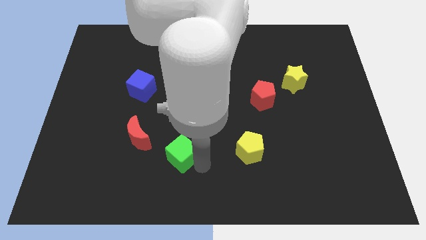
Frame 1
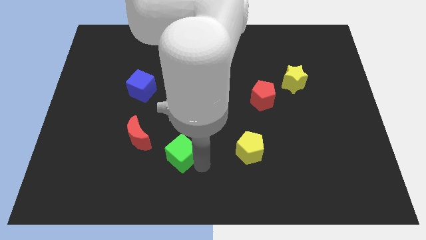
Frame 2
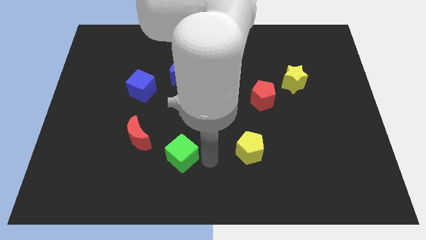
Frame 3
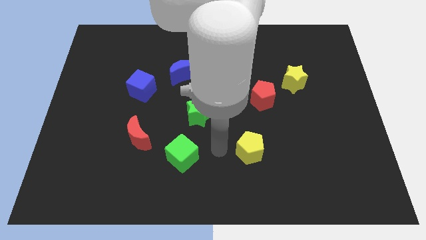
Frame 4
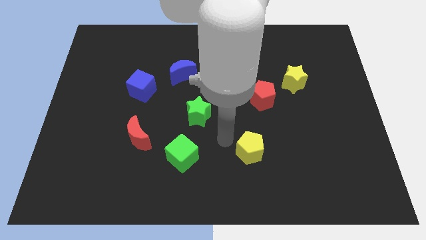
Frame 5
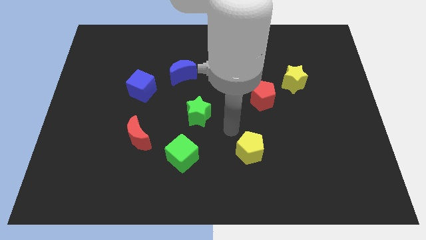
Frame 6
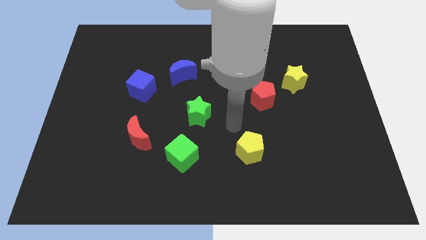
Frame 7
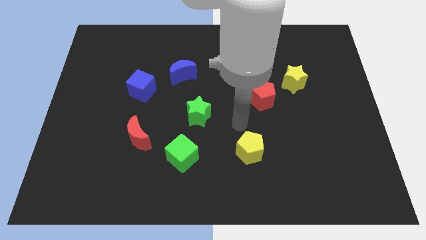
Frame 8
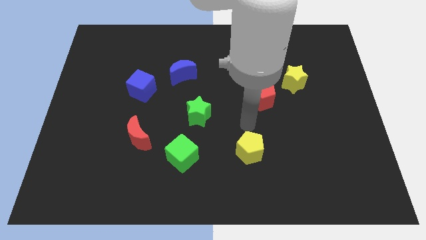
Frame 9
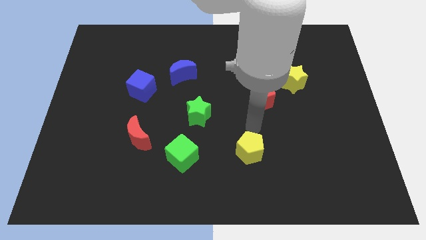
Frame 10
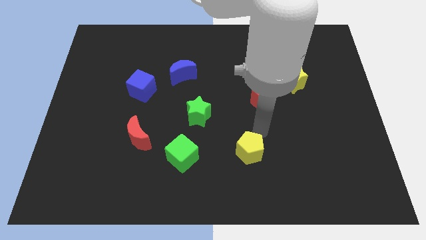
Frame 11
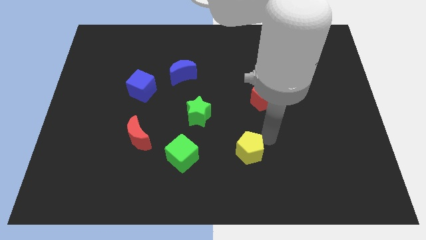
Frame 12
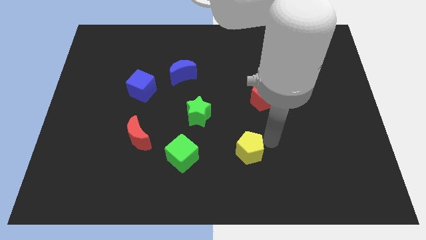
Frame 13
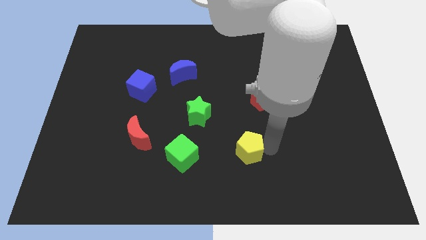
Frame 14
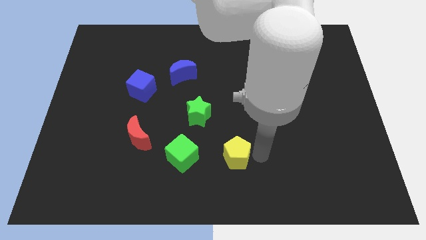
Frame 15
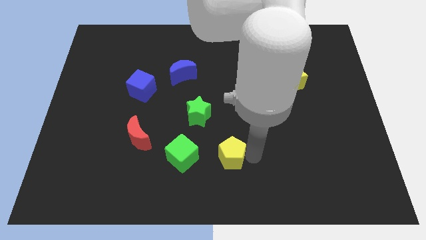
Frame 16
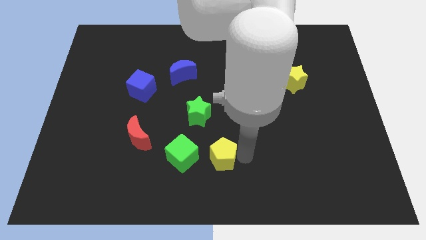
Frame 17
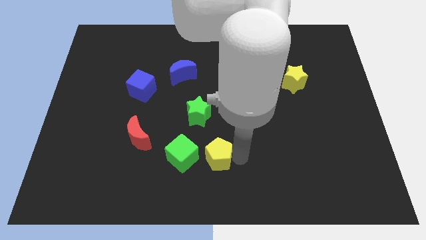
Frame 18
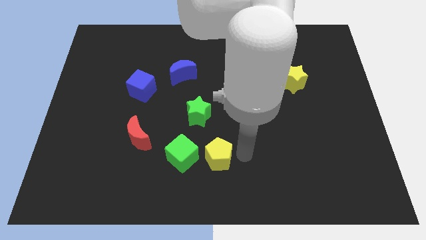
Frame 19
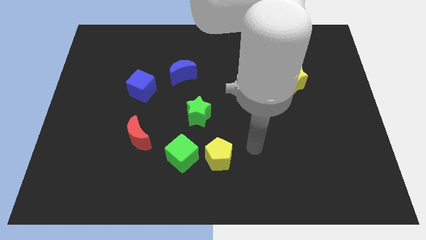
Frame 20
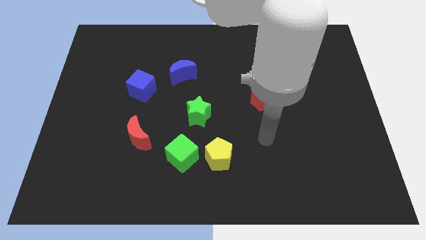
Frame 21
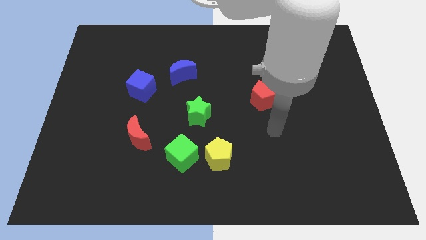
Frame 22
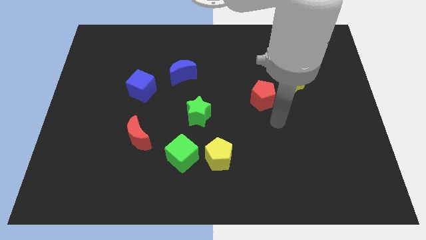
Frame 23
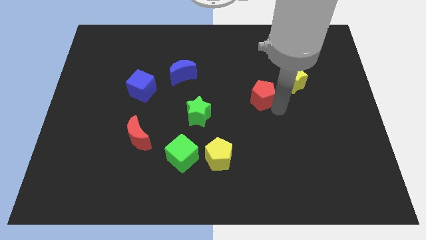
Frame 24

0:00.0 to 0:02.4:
move yellow pentagon to the right of green cube

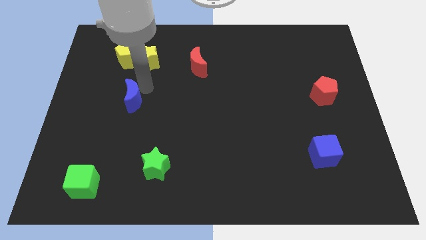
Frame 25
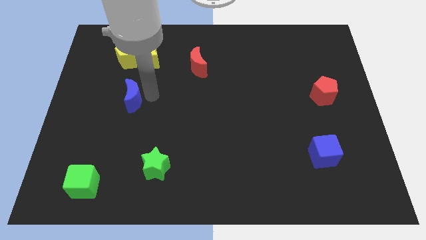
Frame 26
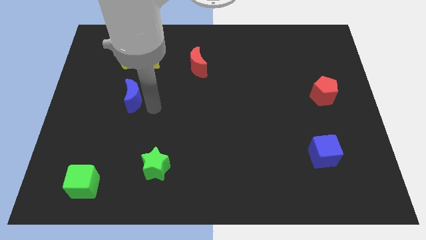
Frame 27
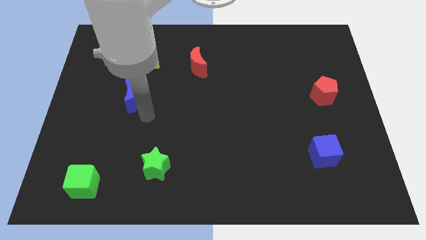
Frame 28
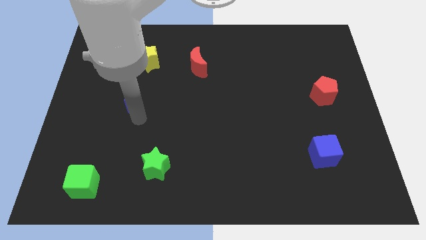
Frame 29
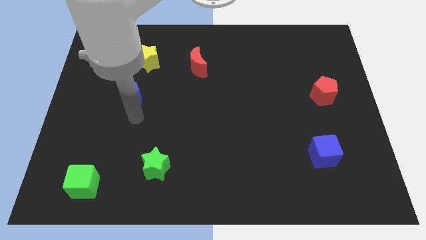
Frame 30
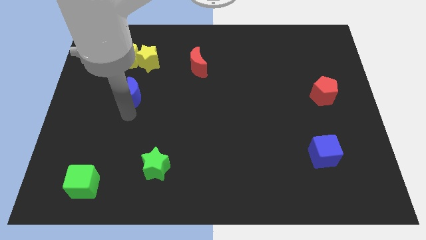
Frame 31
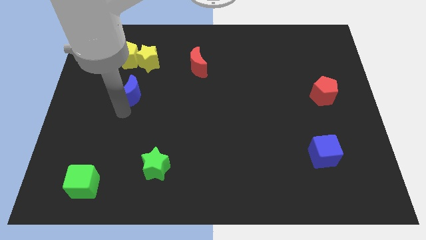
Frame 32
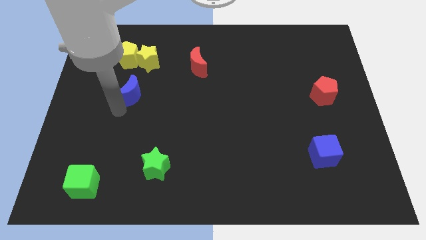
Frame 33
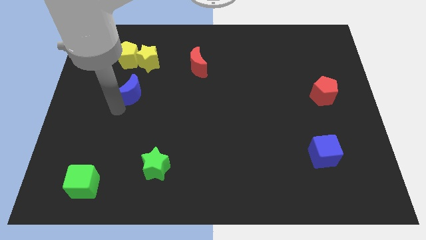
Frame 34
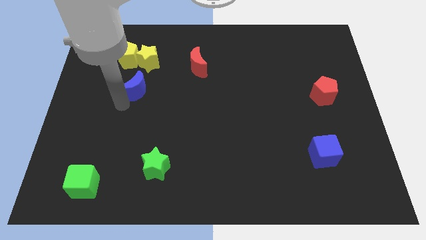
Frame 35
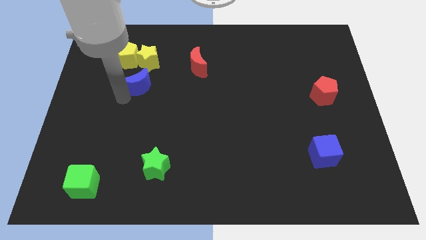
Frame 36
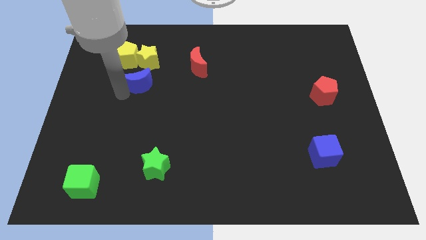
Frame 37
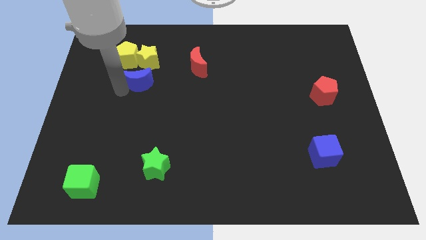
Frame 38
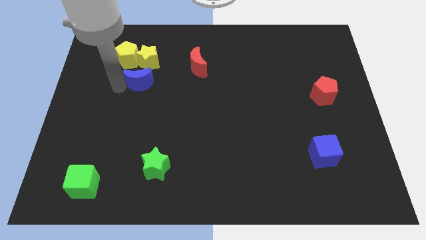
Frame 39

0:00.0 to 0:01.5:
move blue moon below the yellow blocks

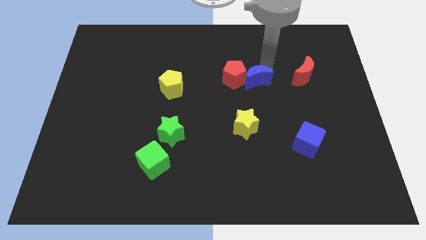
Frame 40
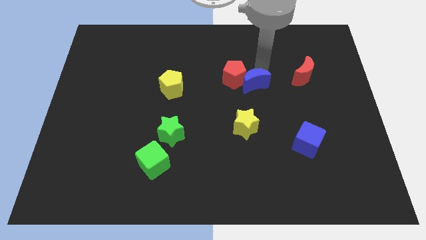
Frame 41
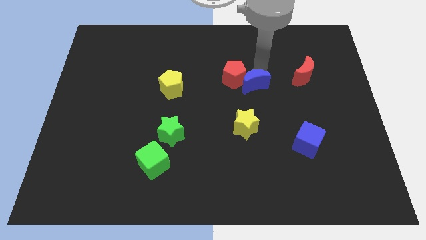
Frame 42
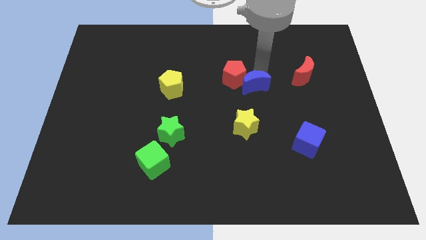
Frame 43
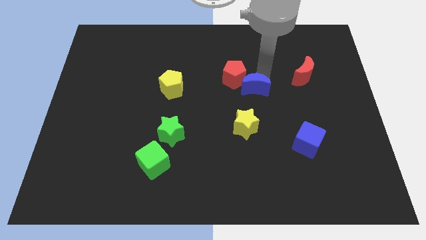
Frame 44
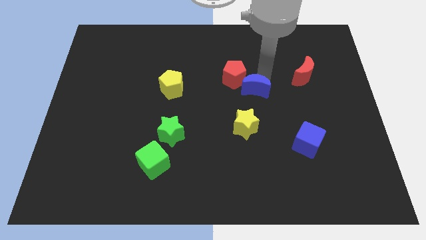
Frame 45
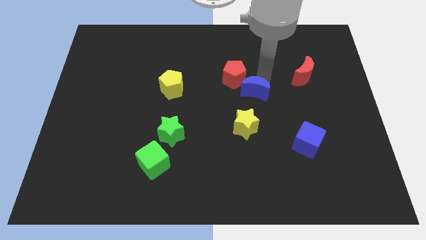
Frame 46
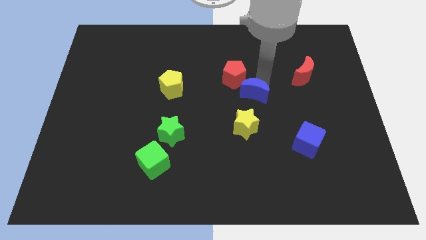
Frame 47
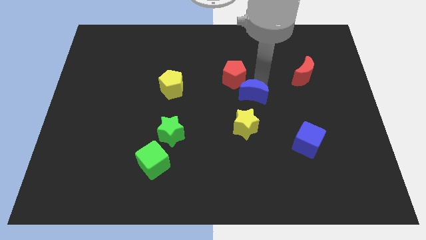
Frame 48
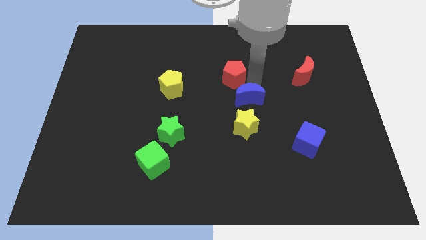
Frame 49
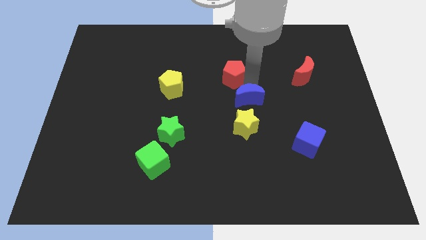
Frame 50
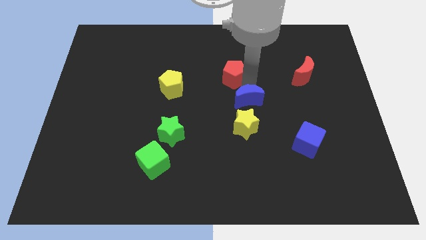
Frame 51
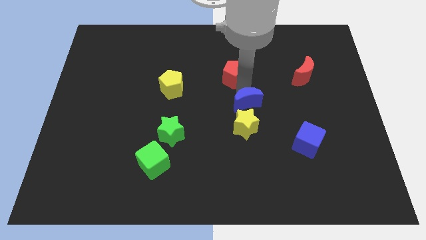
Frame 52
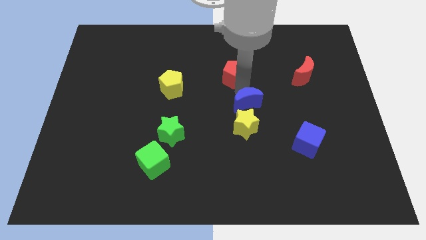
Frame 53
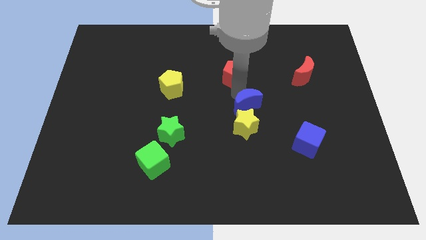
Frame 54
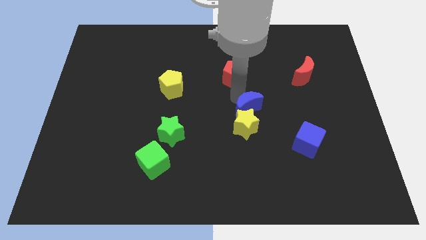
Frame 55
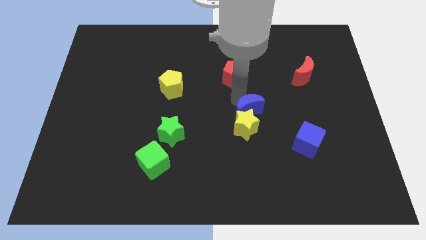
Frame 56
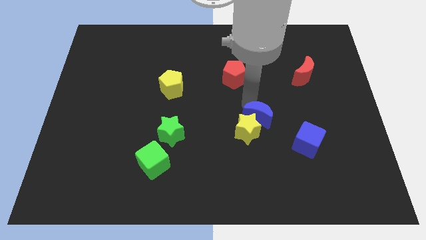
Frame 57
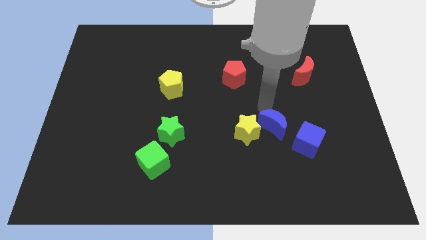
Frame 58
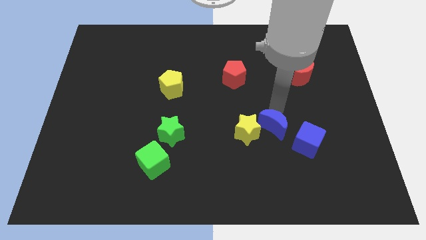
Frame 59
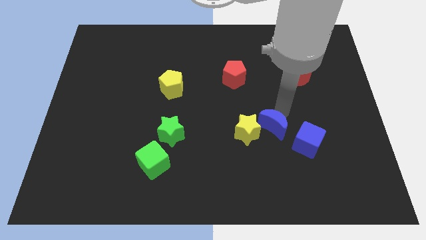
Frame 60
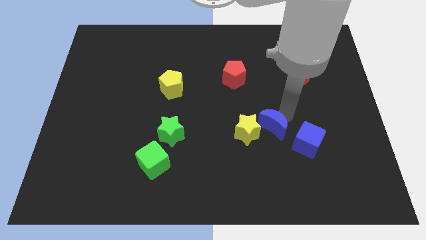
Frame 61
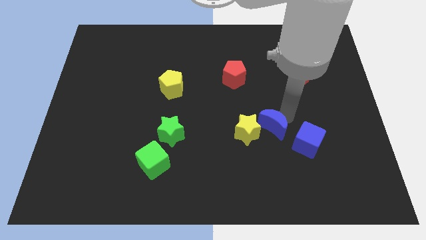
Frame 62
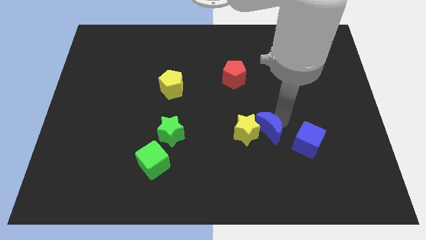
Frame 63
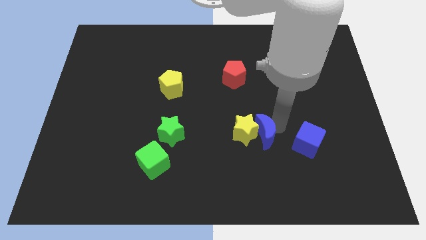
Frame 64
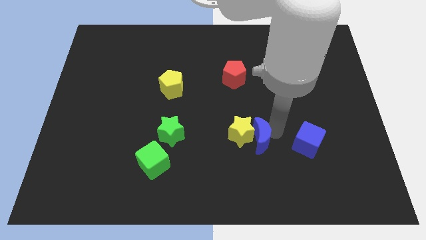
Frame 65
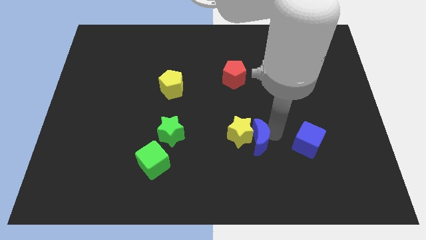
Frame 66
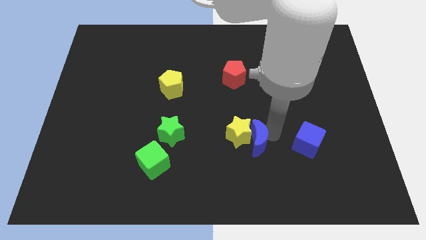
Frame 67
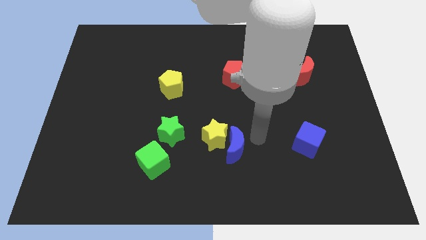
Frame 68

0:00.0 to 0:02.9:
push blue crescent below red pentagon

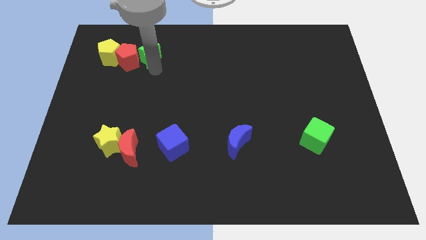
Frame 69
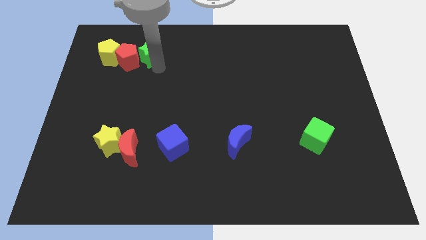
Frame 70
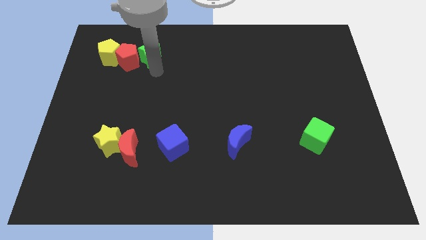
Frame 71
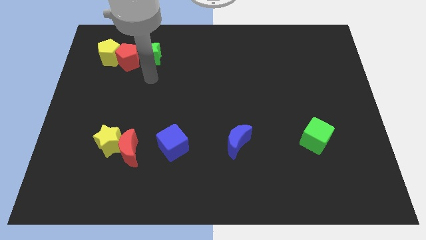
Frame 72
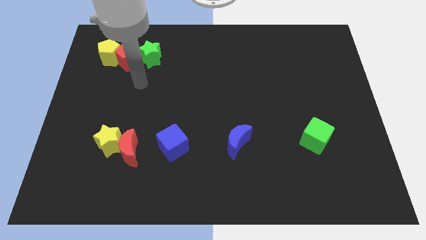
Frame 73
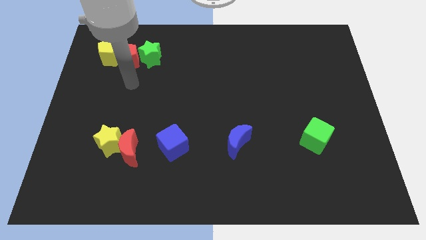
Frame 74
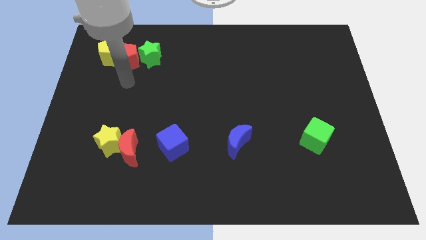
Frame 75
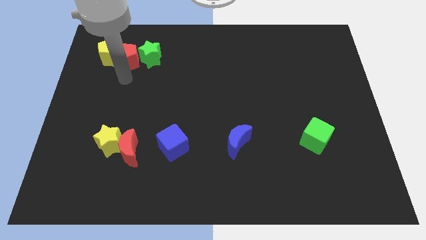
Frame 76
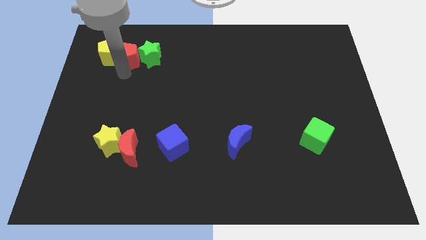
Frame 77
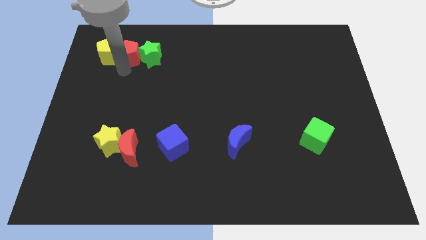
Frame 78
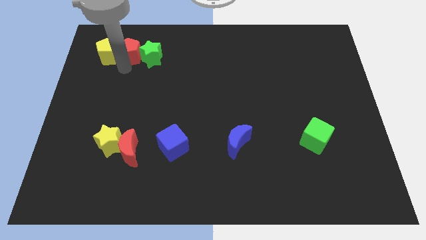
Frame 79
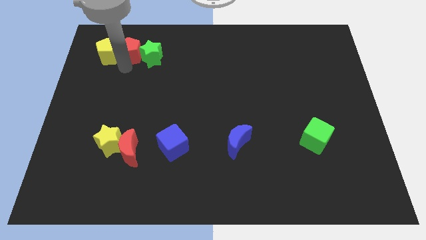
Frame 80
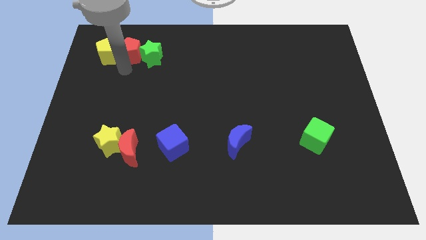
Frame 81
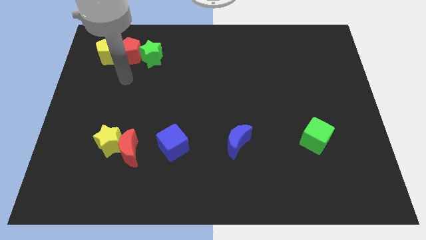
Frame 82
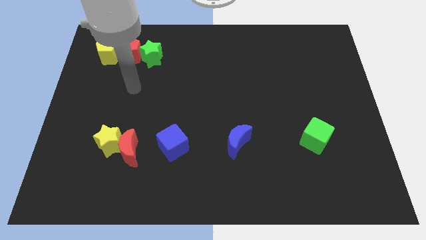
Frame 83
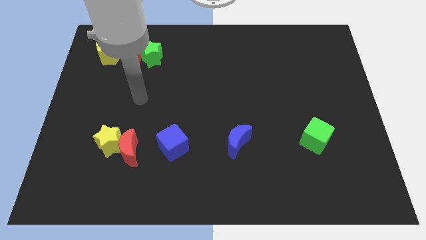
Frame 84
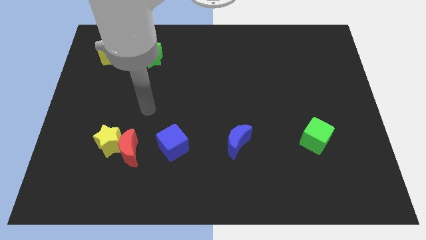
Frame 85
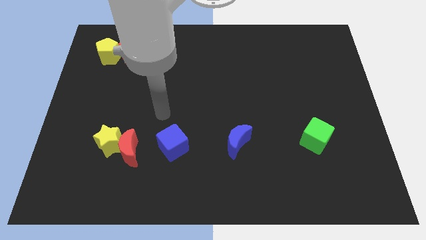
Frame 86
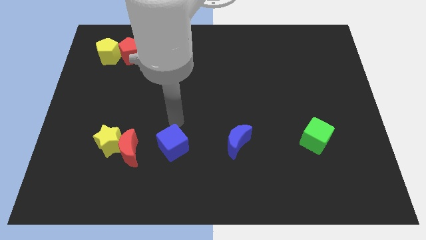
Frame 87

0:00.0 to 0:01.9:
arrange yellow pentagon red pentagon and green star in a horizontal line

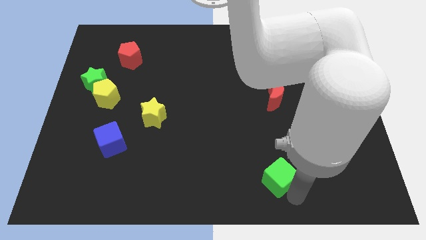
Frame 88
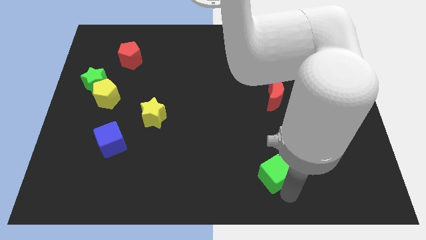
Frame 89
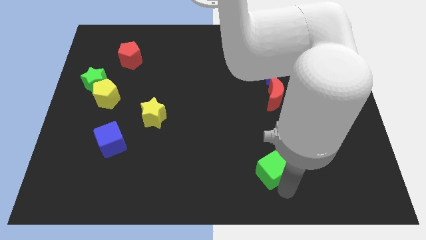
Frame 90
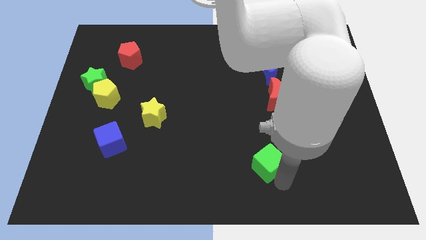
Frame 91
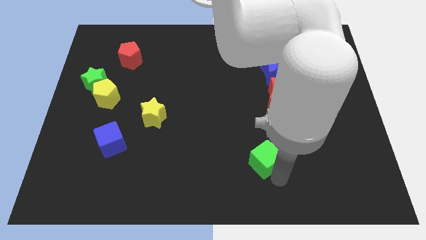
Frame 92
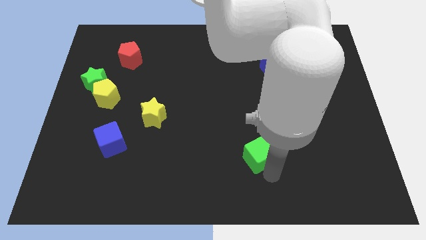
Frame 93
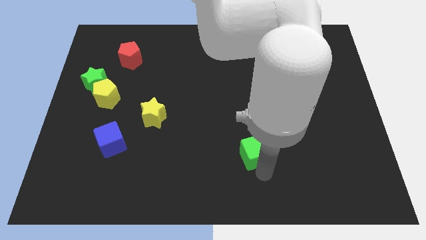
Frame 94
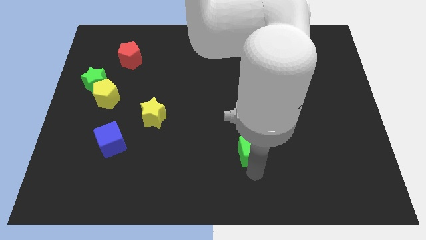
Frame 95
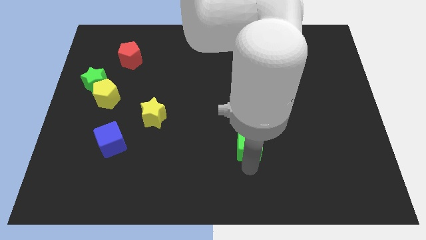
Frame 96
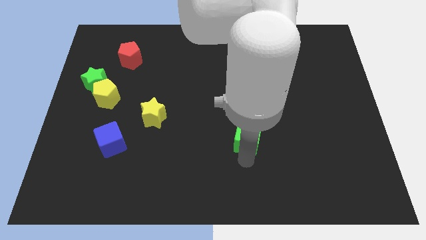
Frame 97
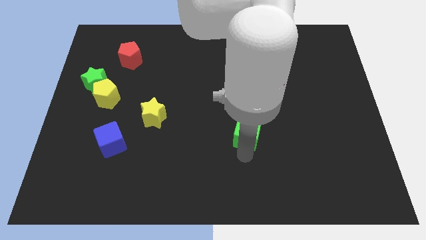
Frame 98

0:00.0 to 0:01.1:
drag the green cube towards the top
